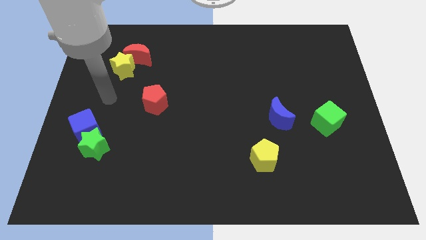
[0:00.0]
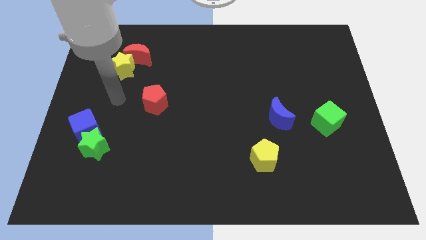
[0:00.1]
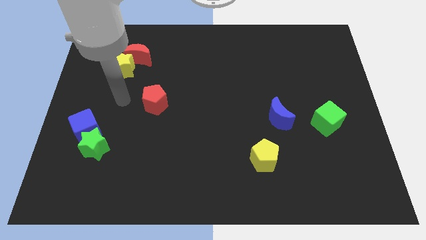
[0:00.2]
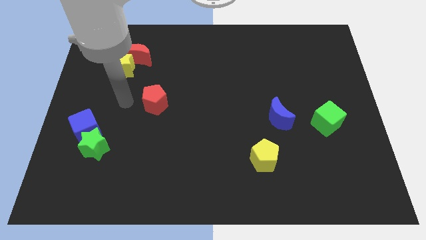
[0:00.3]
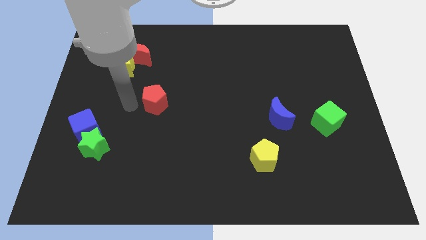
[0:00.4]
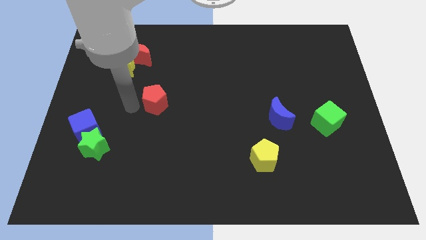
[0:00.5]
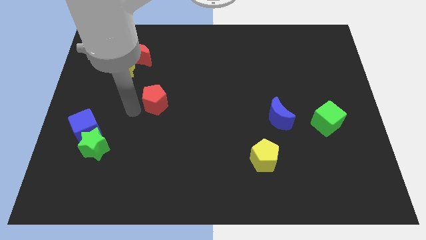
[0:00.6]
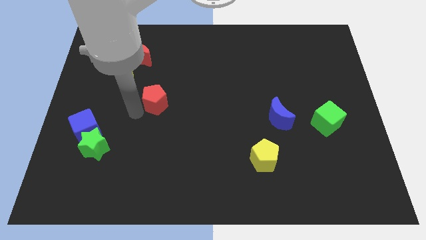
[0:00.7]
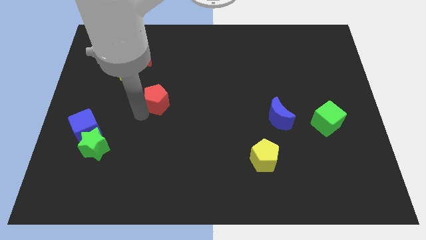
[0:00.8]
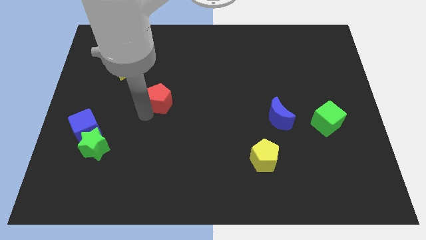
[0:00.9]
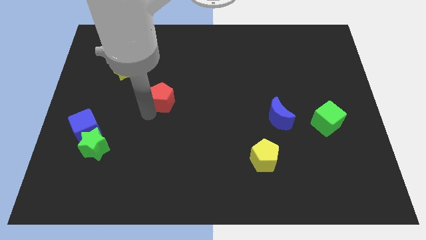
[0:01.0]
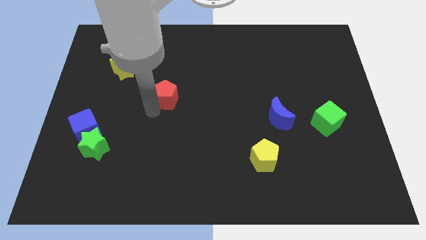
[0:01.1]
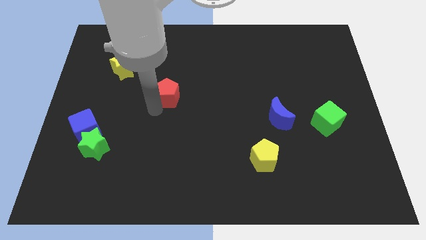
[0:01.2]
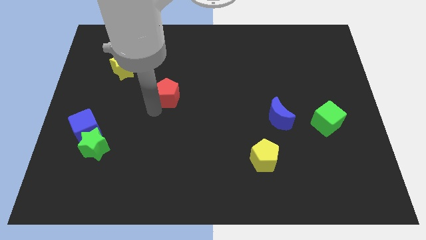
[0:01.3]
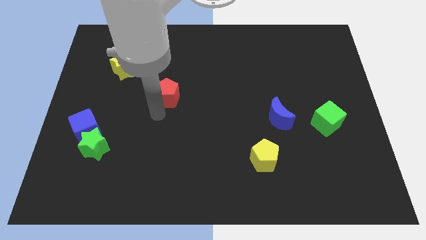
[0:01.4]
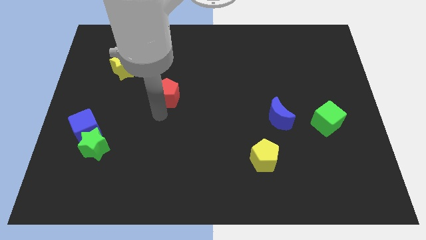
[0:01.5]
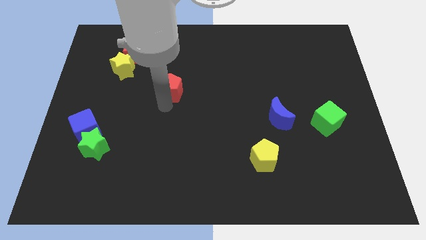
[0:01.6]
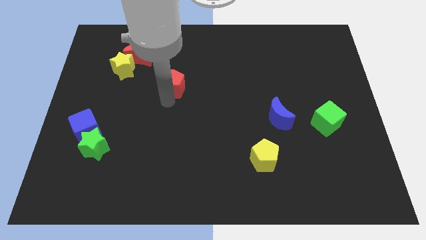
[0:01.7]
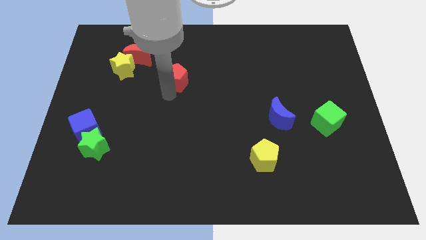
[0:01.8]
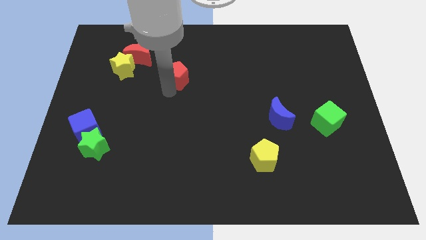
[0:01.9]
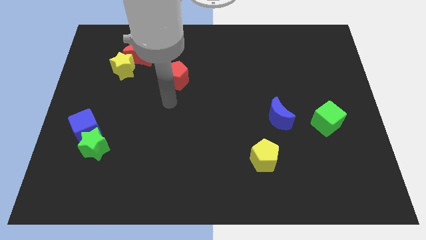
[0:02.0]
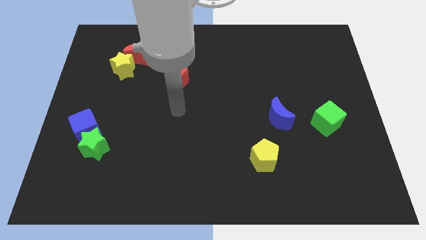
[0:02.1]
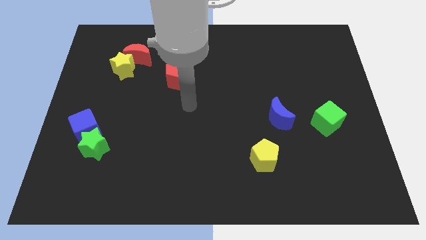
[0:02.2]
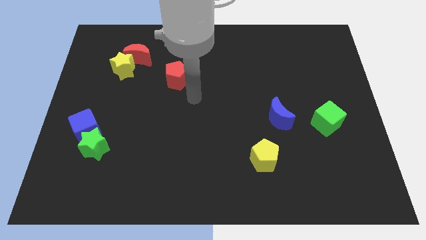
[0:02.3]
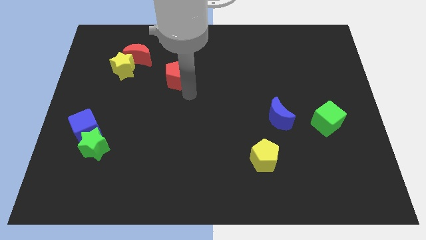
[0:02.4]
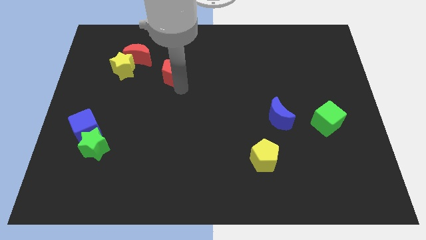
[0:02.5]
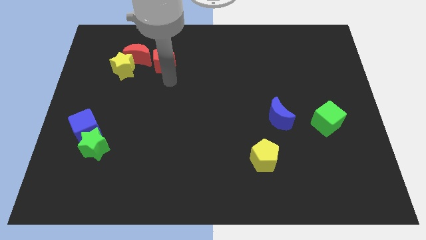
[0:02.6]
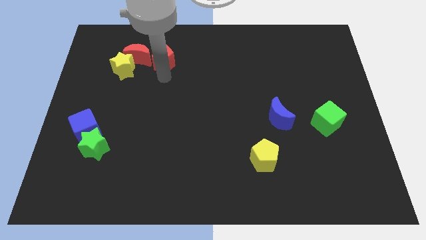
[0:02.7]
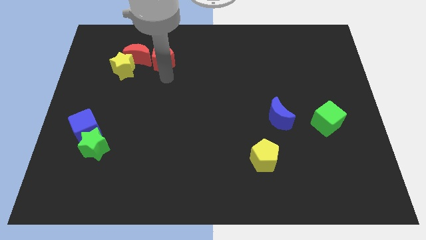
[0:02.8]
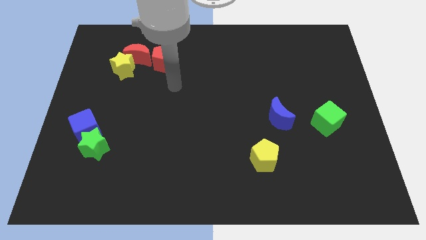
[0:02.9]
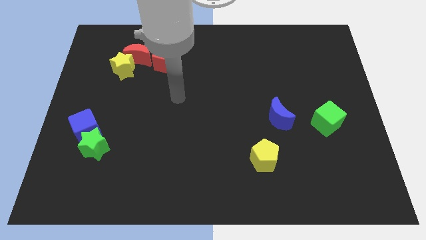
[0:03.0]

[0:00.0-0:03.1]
slide red pentagon to the right of red moon

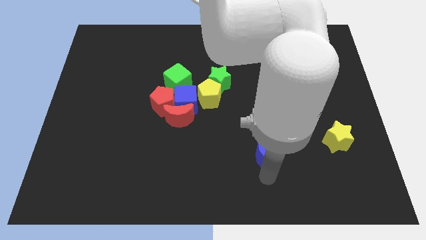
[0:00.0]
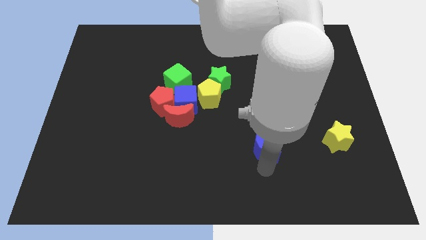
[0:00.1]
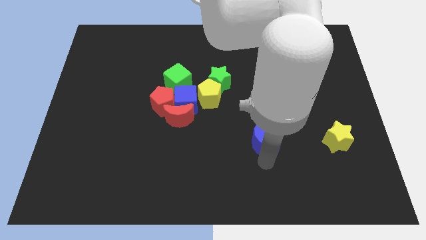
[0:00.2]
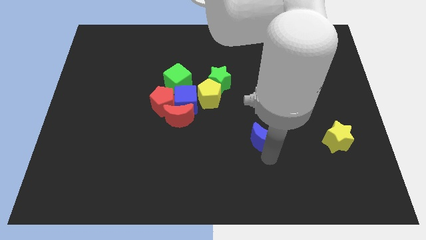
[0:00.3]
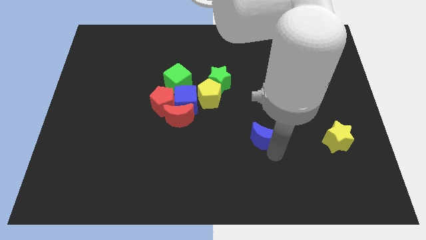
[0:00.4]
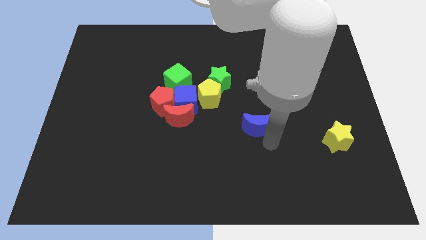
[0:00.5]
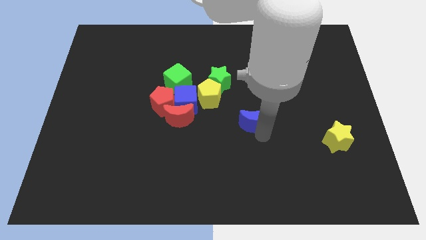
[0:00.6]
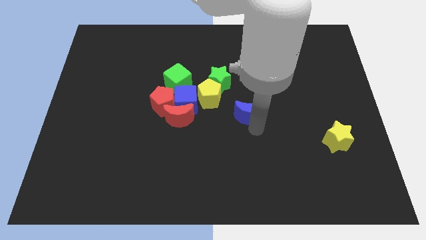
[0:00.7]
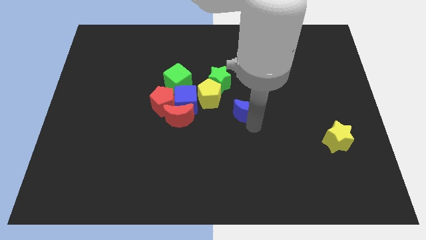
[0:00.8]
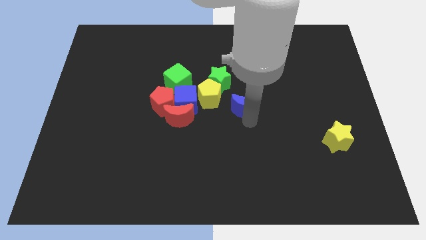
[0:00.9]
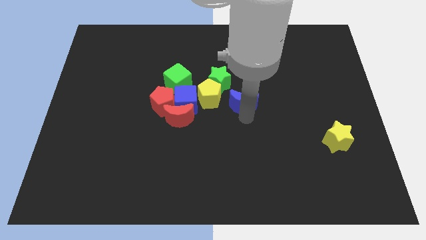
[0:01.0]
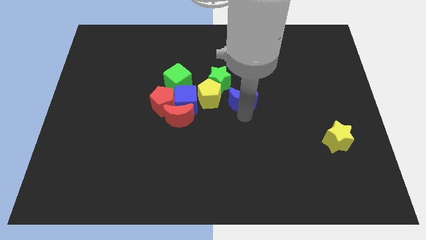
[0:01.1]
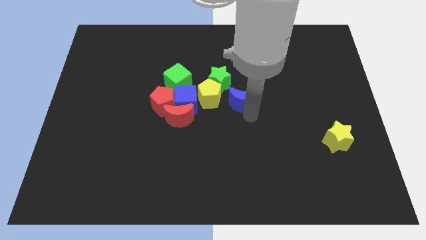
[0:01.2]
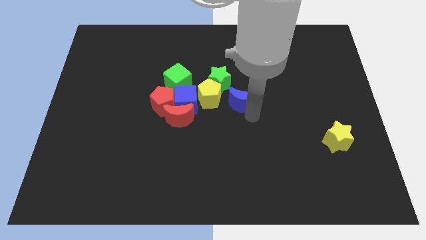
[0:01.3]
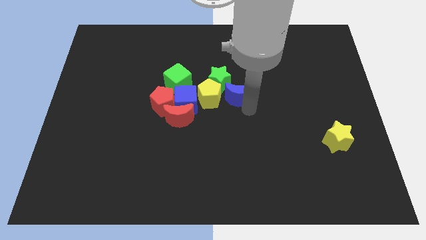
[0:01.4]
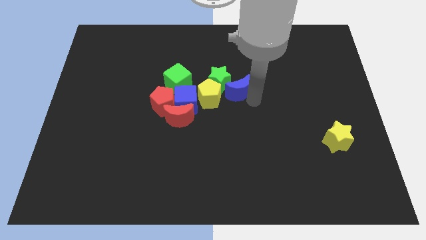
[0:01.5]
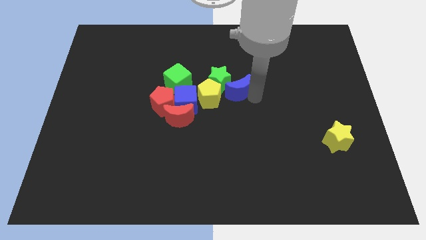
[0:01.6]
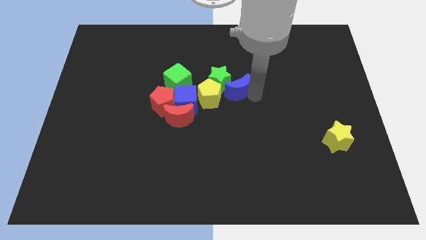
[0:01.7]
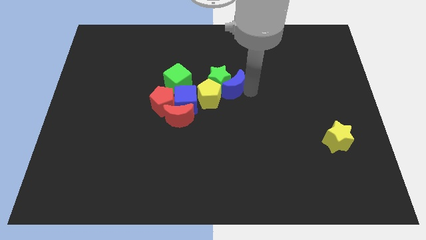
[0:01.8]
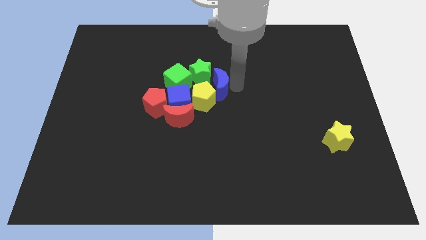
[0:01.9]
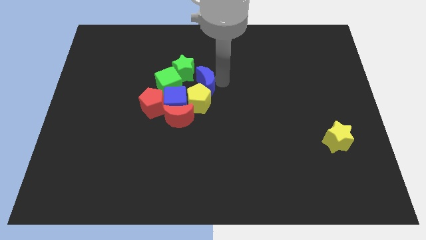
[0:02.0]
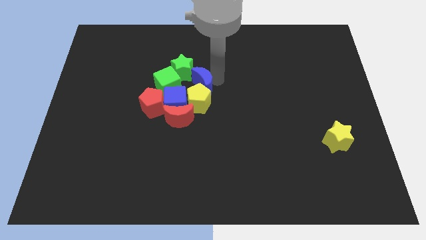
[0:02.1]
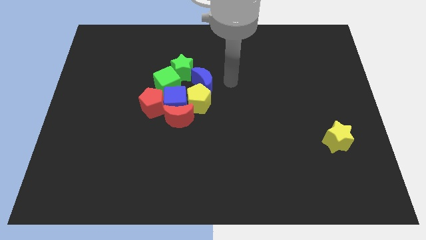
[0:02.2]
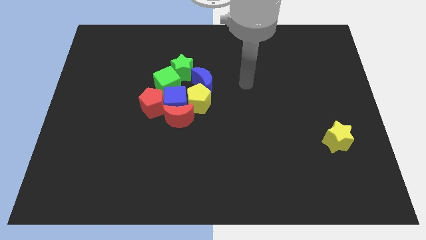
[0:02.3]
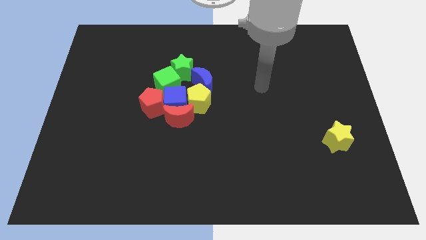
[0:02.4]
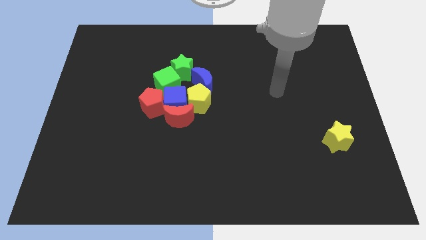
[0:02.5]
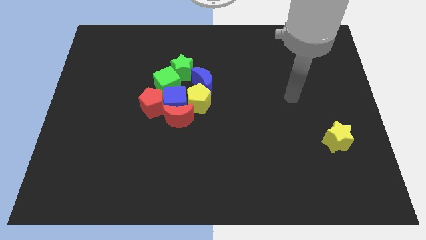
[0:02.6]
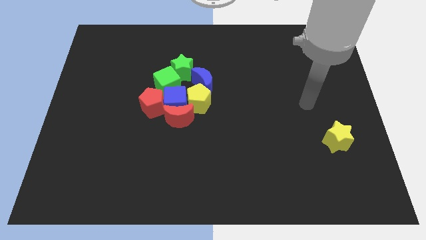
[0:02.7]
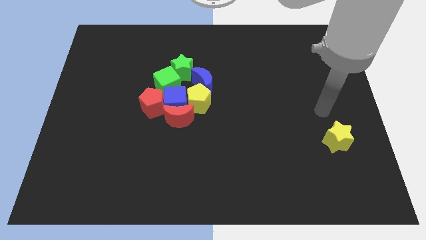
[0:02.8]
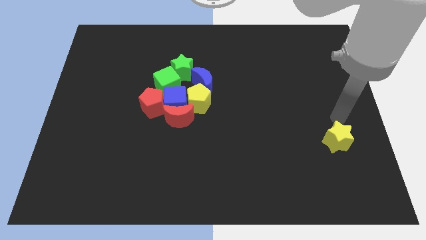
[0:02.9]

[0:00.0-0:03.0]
place blue crescent near the green star

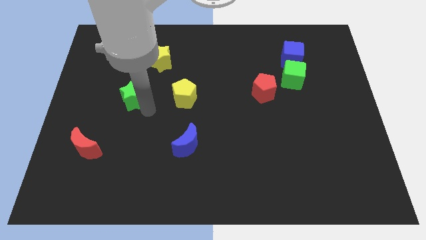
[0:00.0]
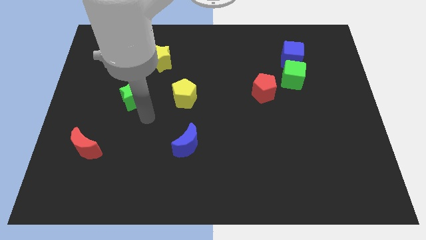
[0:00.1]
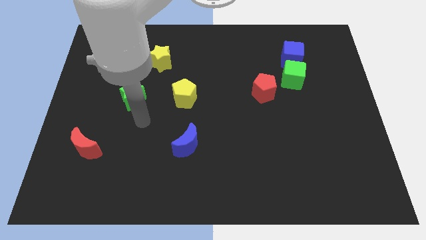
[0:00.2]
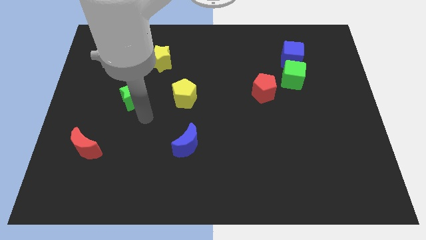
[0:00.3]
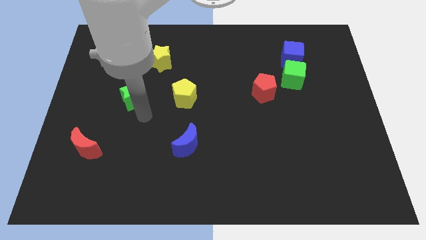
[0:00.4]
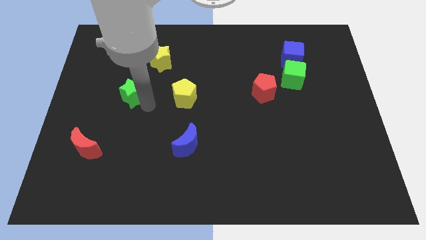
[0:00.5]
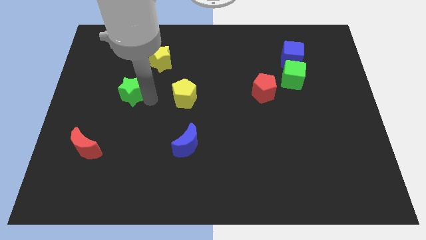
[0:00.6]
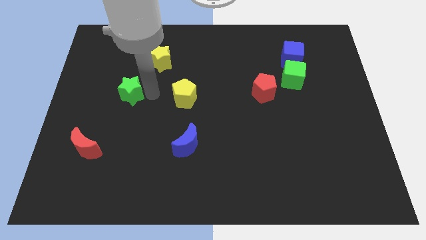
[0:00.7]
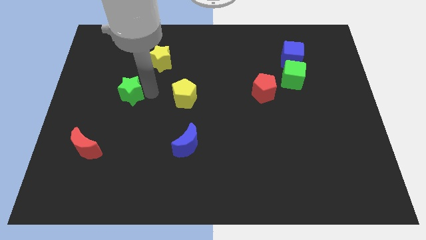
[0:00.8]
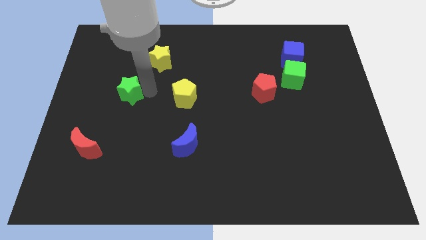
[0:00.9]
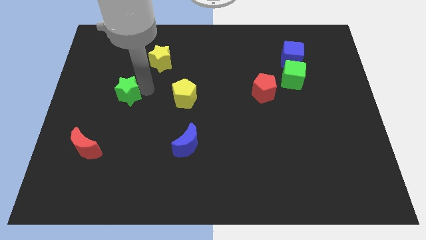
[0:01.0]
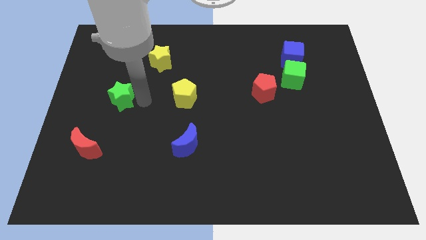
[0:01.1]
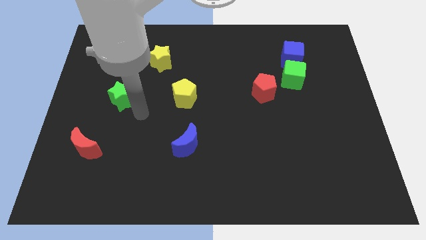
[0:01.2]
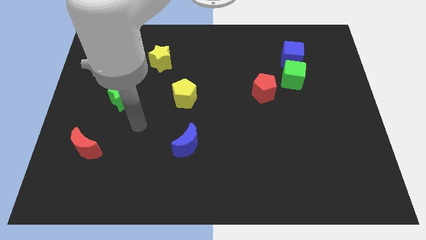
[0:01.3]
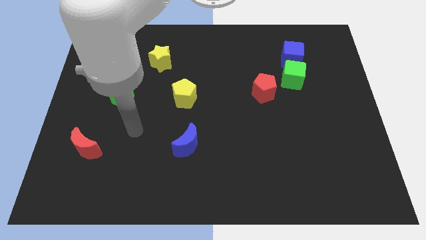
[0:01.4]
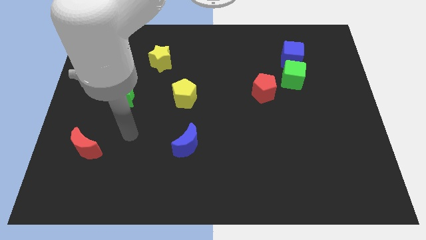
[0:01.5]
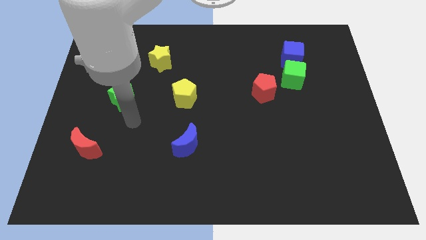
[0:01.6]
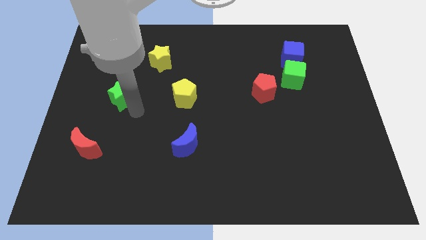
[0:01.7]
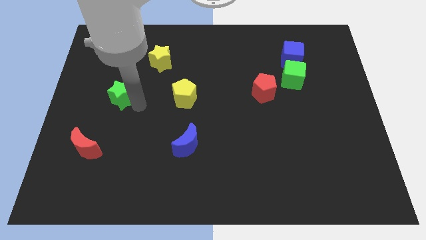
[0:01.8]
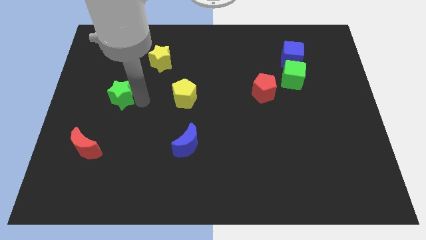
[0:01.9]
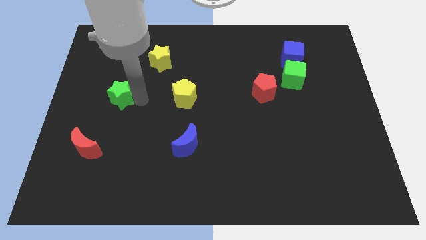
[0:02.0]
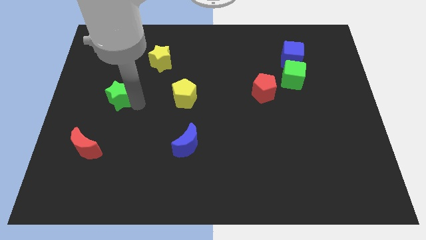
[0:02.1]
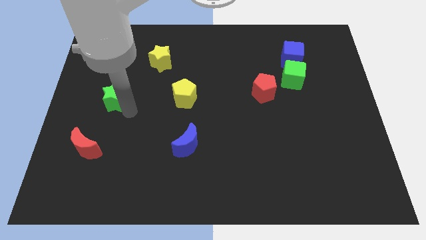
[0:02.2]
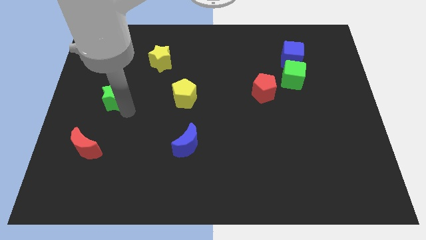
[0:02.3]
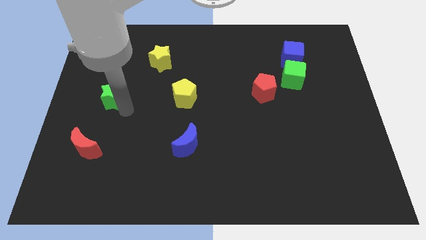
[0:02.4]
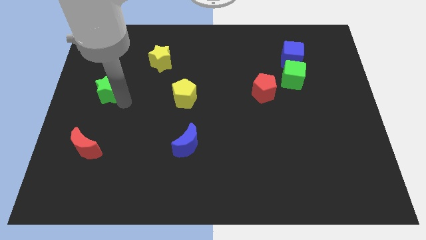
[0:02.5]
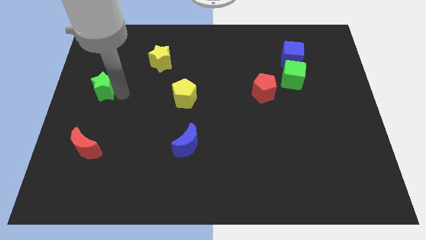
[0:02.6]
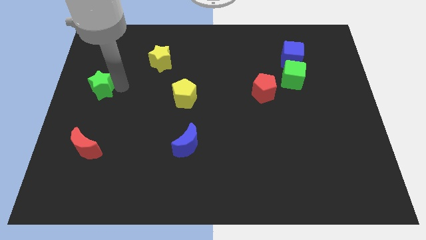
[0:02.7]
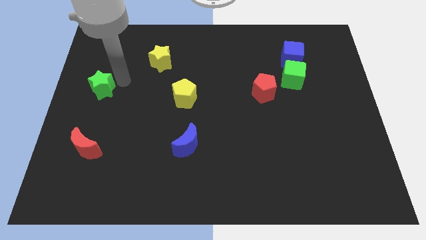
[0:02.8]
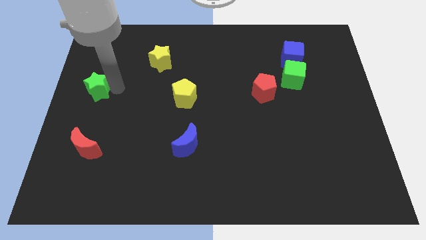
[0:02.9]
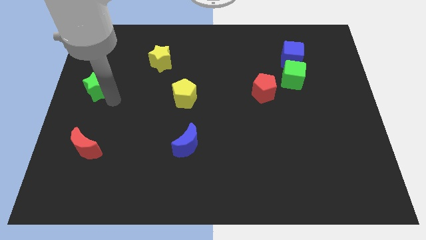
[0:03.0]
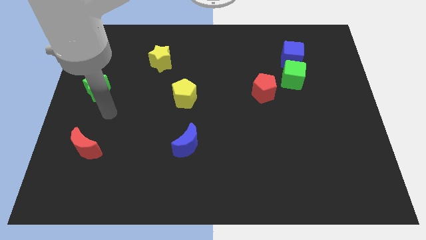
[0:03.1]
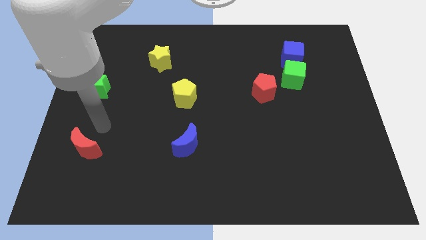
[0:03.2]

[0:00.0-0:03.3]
push the green star vertically above the red moon
